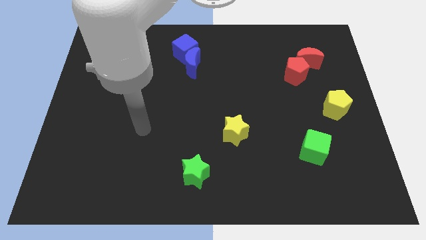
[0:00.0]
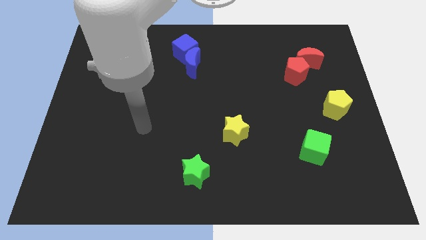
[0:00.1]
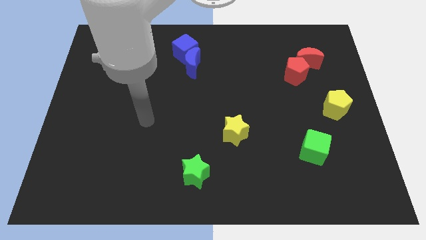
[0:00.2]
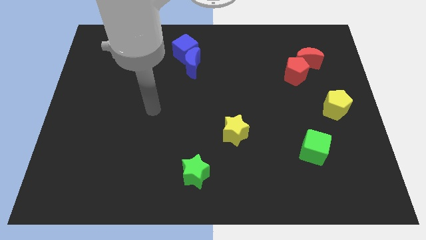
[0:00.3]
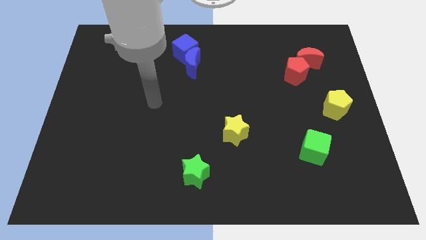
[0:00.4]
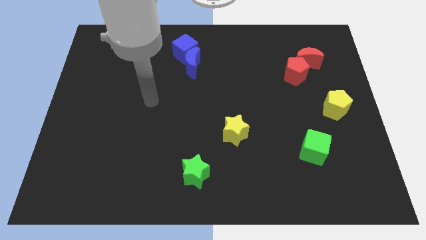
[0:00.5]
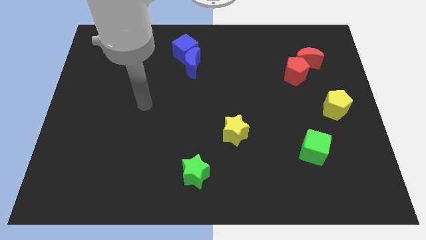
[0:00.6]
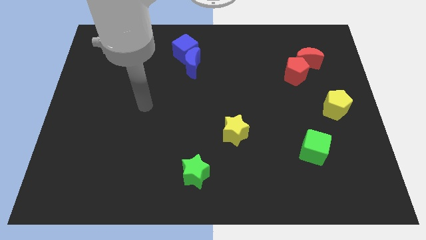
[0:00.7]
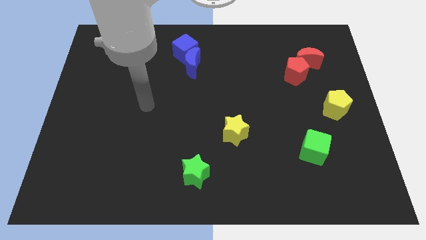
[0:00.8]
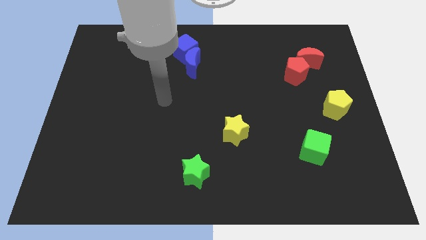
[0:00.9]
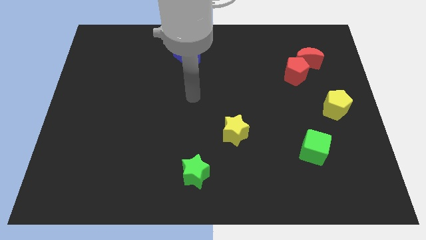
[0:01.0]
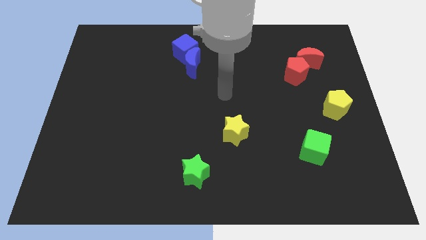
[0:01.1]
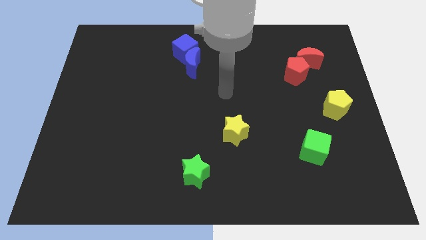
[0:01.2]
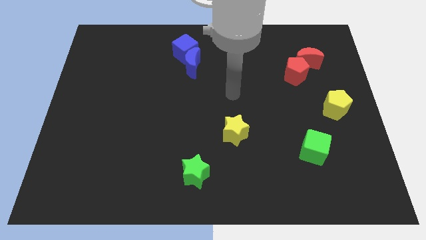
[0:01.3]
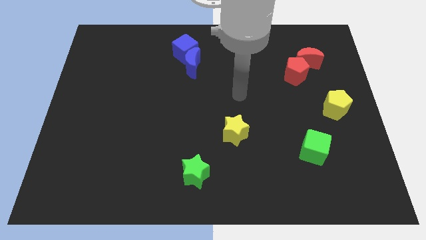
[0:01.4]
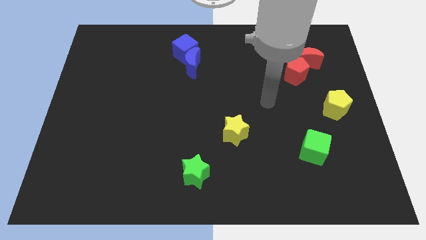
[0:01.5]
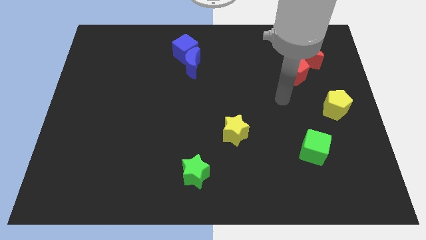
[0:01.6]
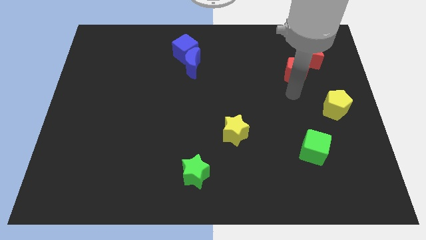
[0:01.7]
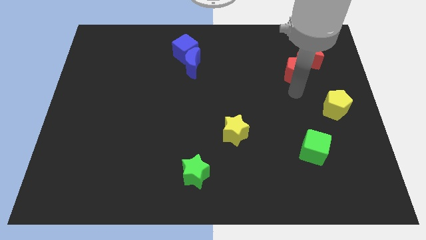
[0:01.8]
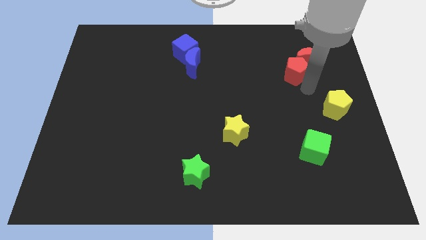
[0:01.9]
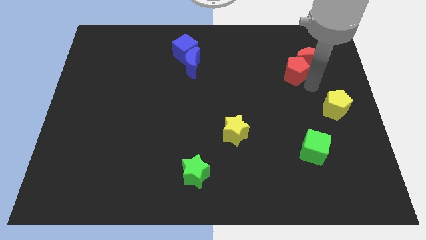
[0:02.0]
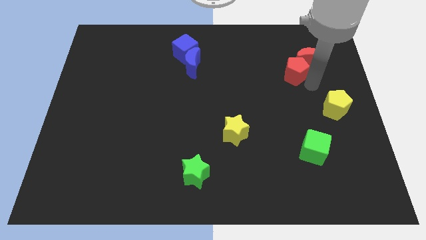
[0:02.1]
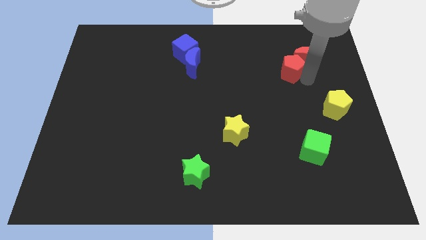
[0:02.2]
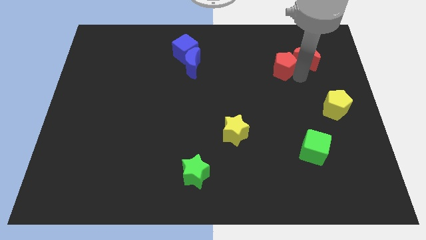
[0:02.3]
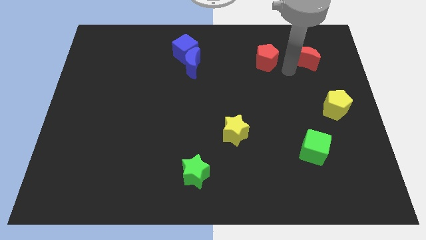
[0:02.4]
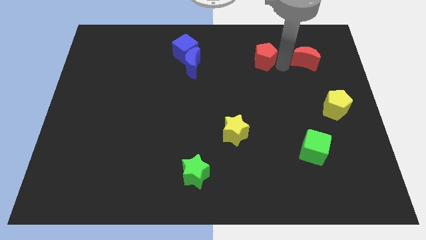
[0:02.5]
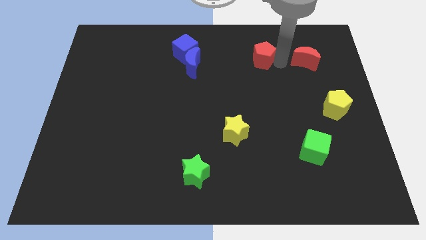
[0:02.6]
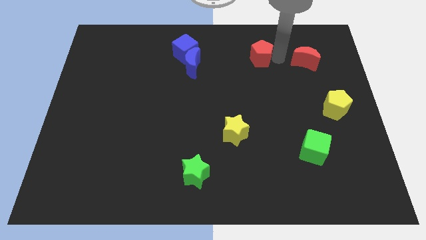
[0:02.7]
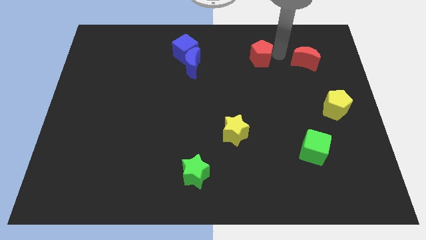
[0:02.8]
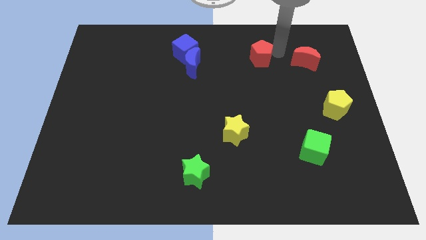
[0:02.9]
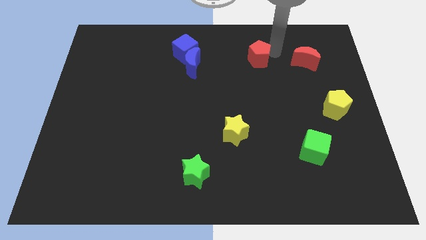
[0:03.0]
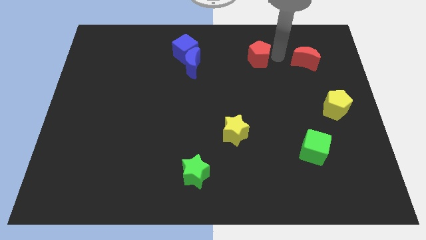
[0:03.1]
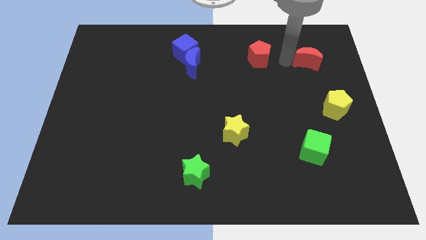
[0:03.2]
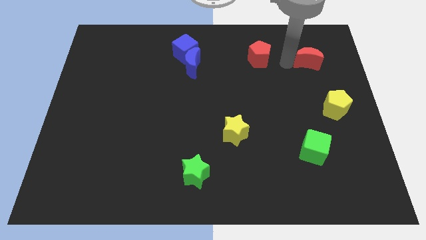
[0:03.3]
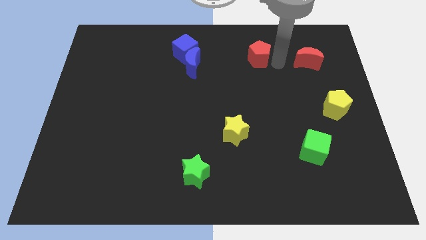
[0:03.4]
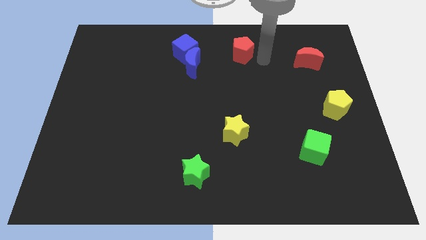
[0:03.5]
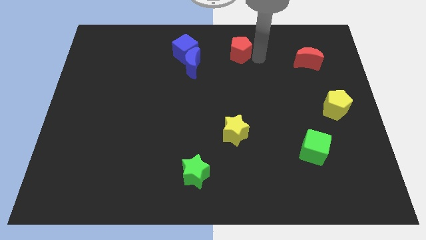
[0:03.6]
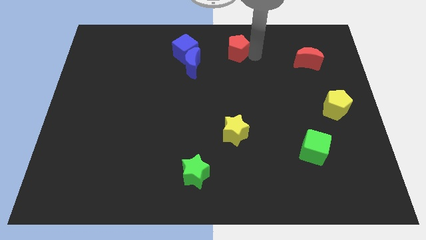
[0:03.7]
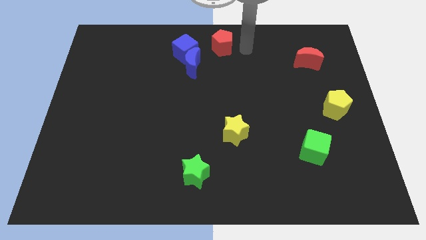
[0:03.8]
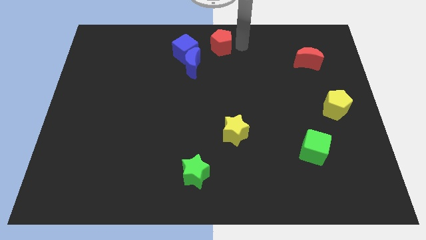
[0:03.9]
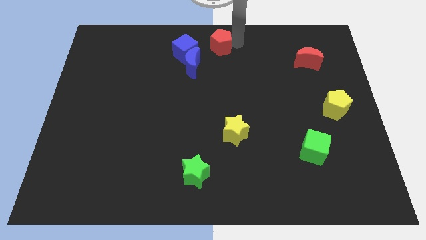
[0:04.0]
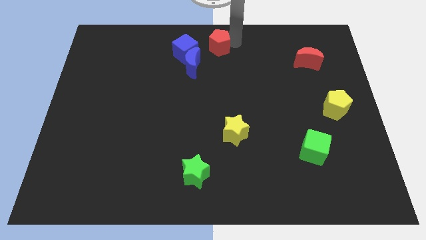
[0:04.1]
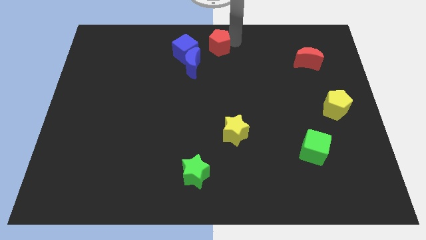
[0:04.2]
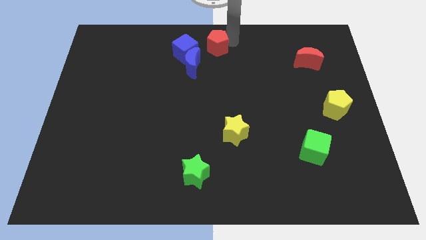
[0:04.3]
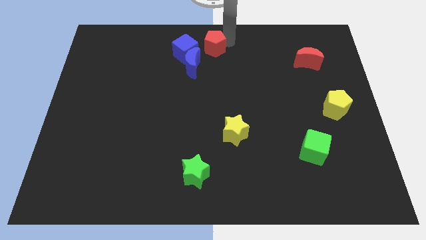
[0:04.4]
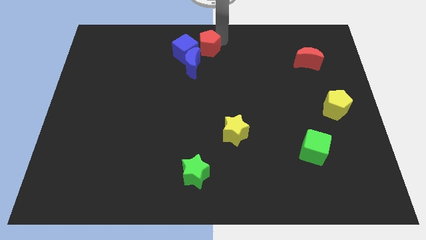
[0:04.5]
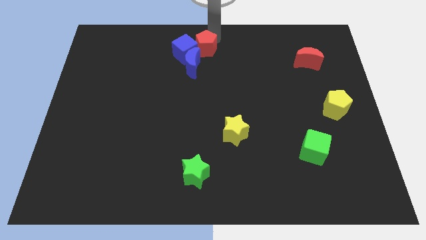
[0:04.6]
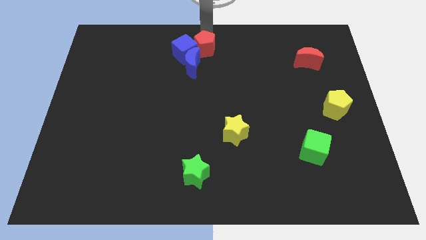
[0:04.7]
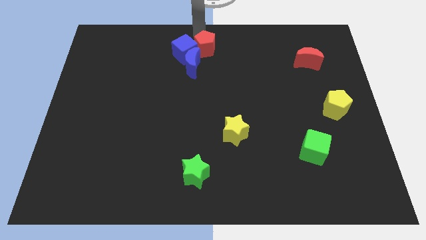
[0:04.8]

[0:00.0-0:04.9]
push the red pentagon next to the blue cube

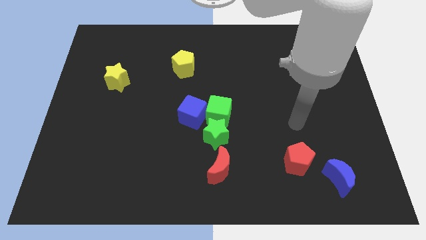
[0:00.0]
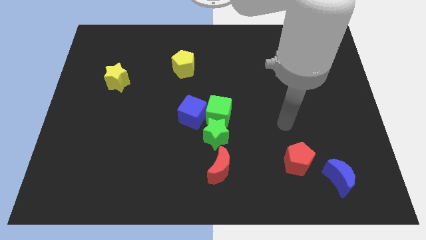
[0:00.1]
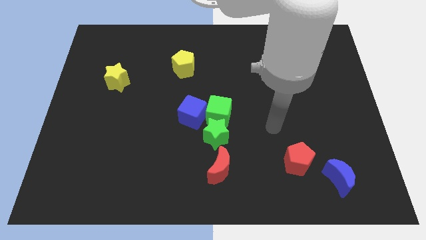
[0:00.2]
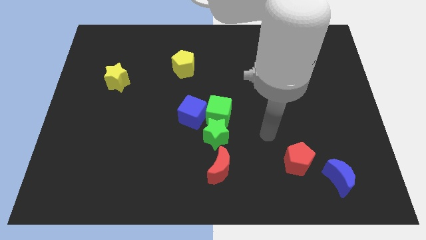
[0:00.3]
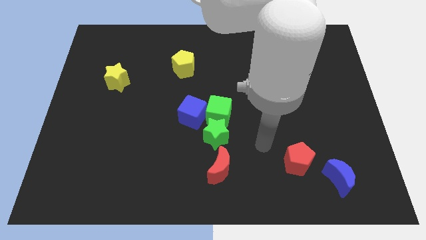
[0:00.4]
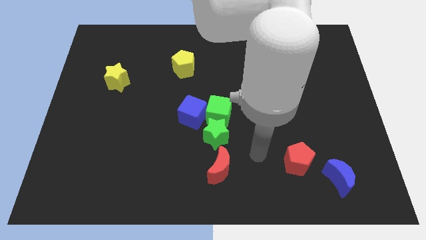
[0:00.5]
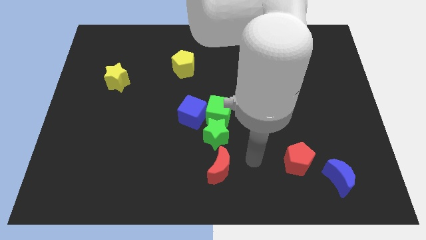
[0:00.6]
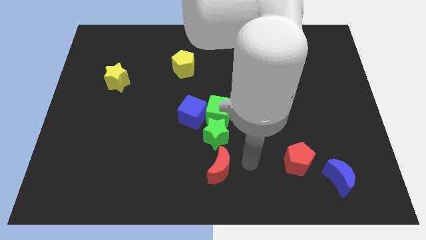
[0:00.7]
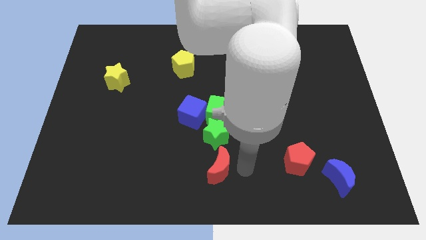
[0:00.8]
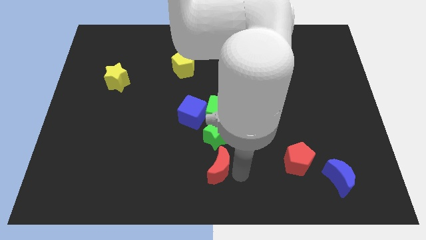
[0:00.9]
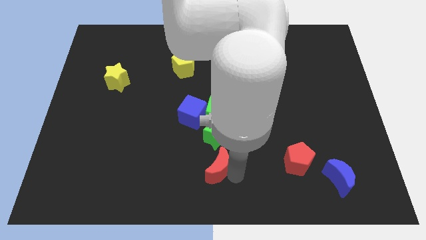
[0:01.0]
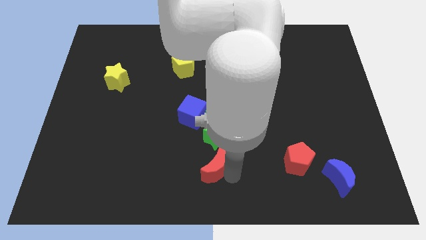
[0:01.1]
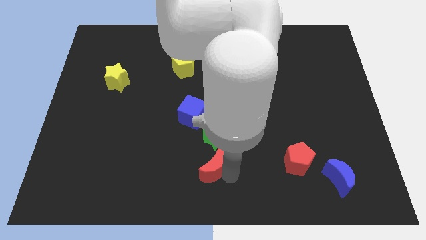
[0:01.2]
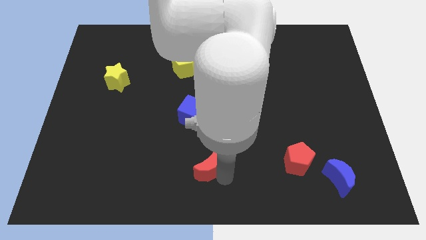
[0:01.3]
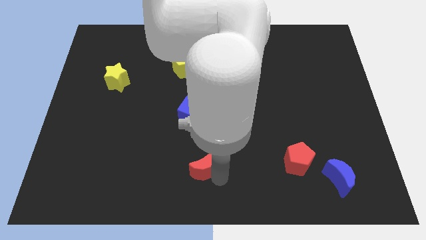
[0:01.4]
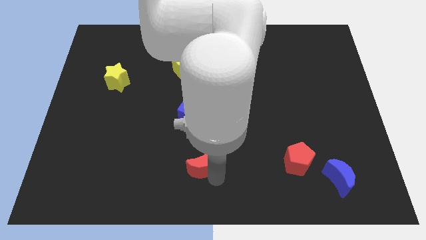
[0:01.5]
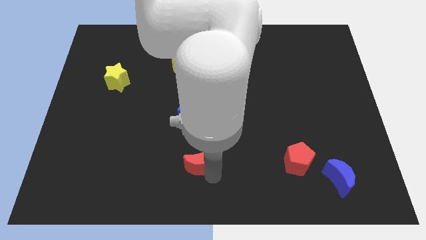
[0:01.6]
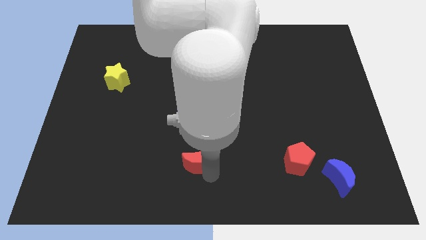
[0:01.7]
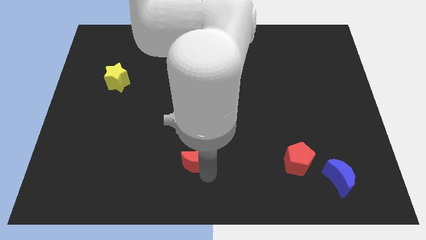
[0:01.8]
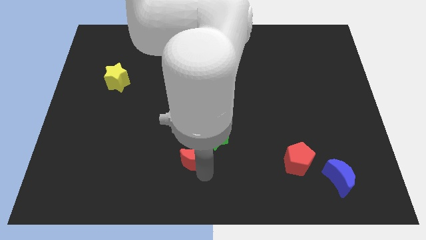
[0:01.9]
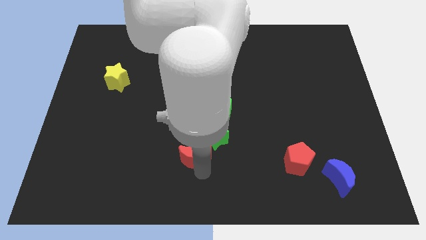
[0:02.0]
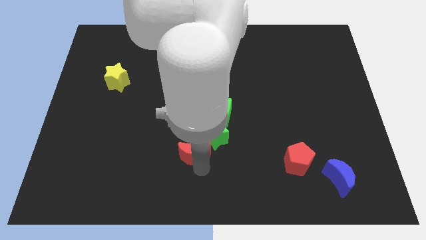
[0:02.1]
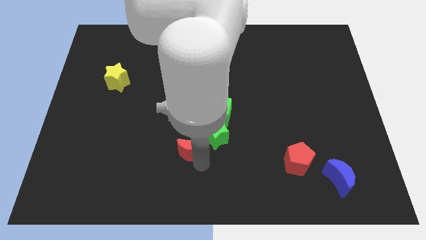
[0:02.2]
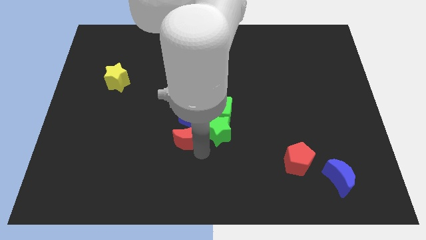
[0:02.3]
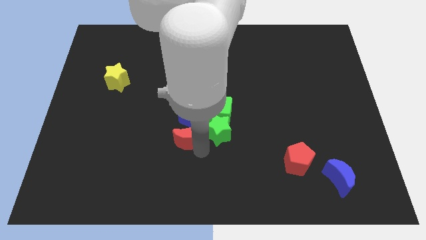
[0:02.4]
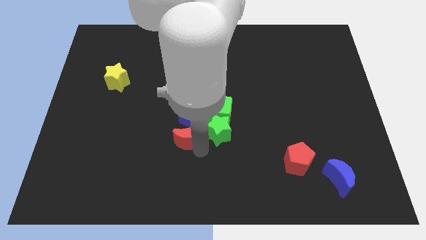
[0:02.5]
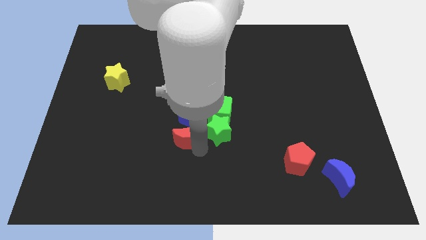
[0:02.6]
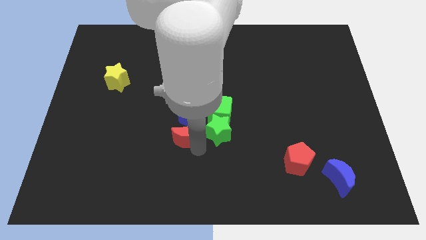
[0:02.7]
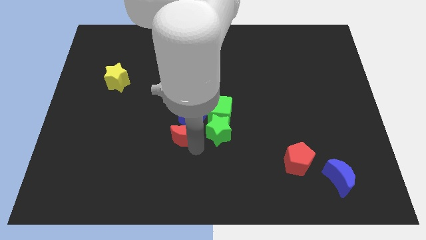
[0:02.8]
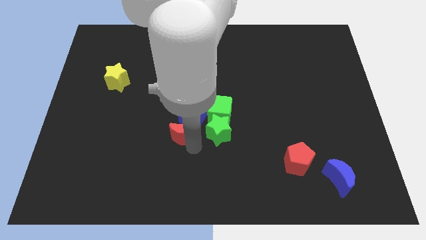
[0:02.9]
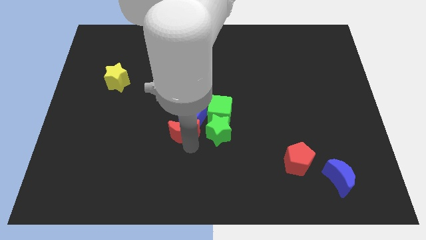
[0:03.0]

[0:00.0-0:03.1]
push the red moon towards the blue cube

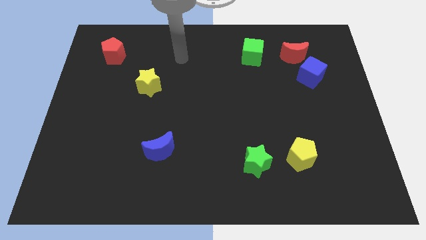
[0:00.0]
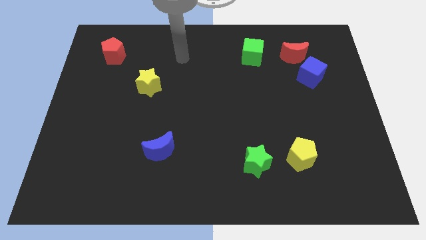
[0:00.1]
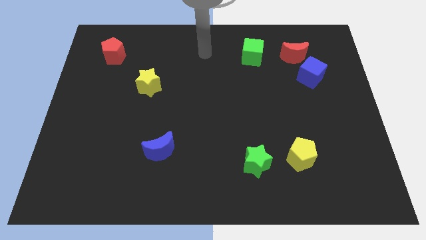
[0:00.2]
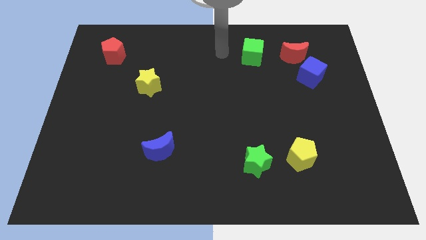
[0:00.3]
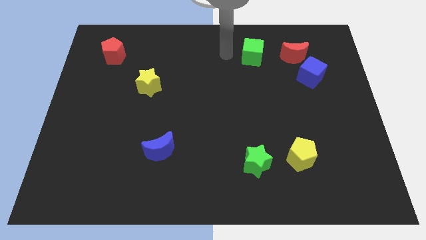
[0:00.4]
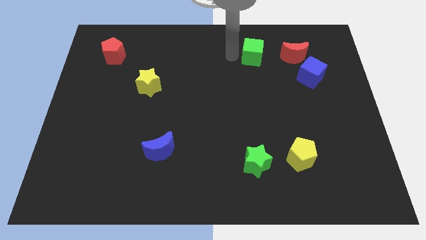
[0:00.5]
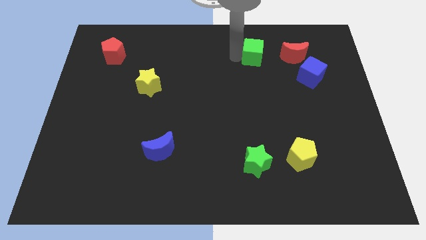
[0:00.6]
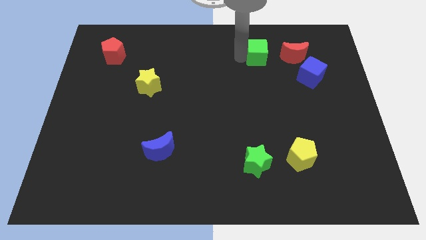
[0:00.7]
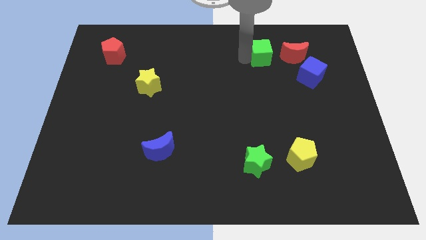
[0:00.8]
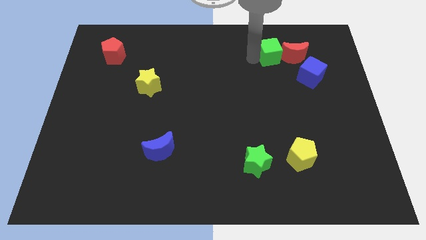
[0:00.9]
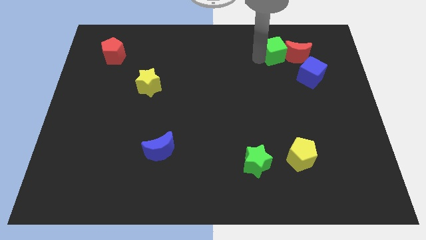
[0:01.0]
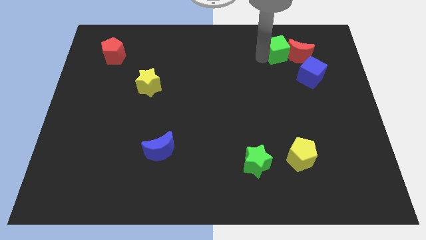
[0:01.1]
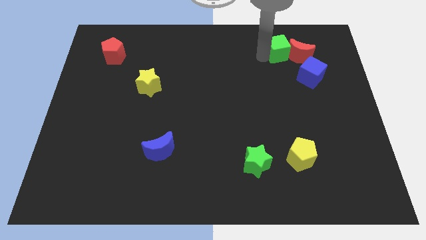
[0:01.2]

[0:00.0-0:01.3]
slide the green cube close to the red moon
